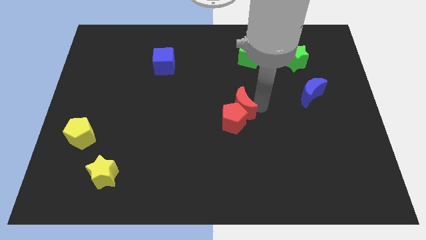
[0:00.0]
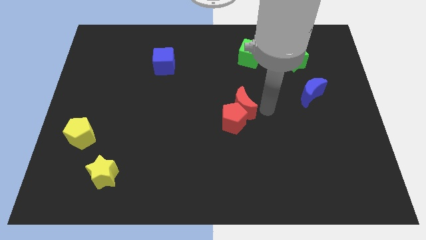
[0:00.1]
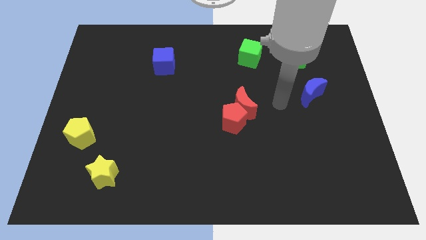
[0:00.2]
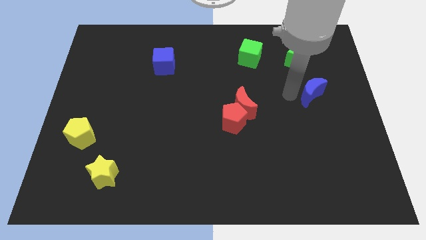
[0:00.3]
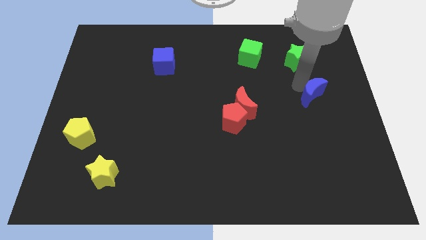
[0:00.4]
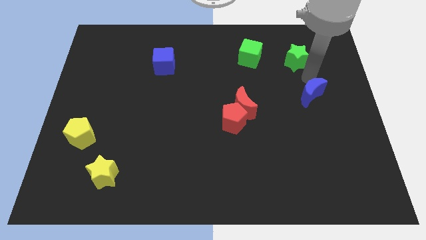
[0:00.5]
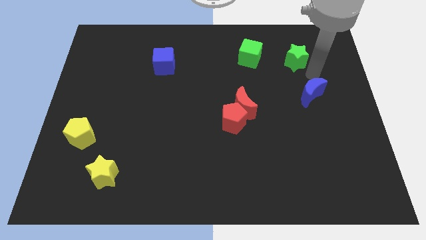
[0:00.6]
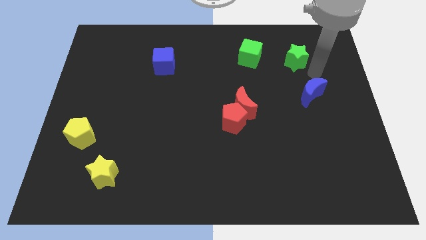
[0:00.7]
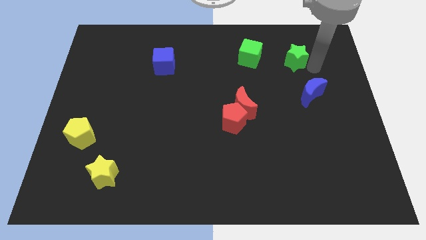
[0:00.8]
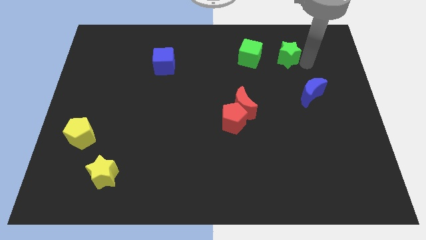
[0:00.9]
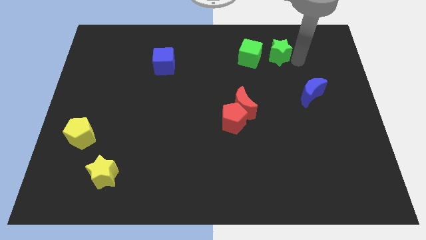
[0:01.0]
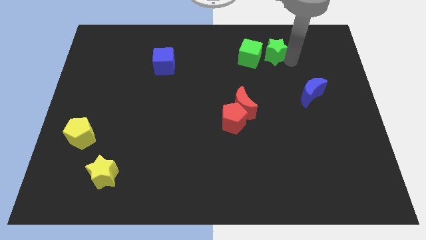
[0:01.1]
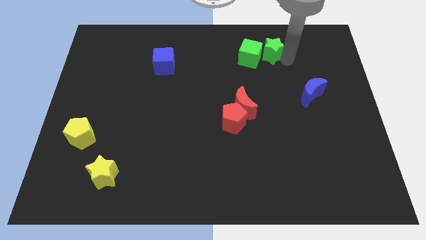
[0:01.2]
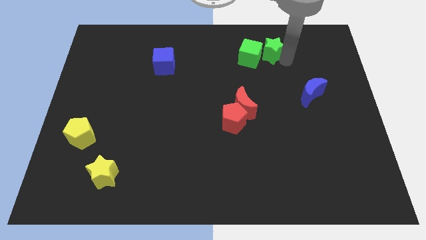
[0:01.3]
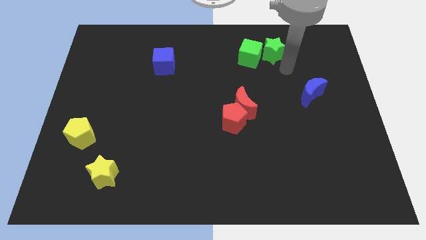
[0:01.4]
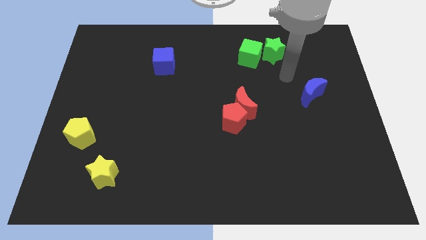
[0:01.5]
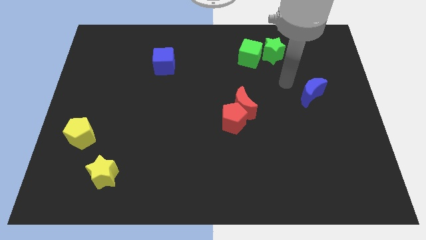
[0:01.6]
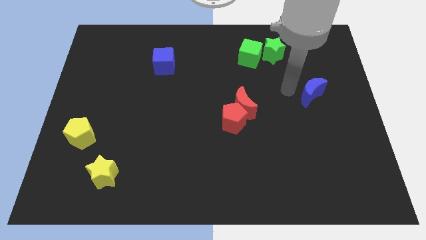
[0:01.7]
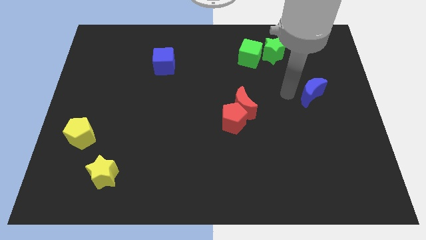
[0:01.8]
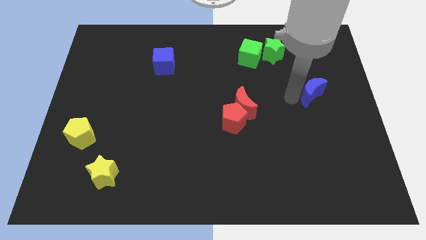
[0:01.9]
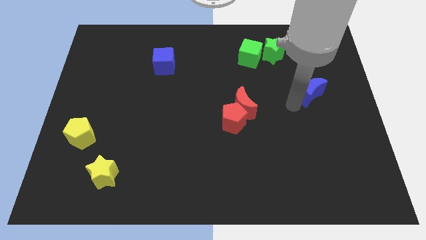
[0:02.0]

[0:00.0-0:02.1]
move green star into green cube

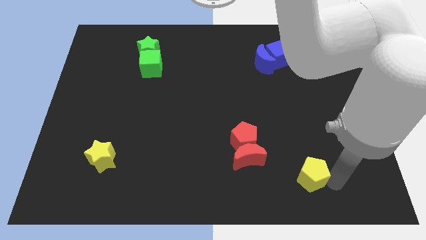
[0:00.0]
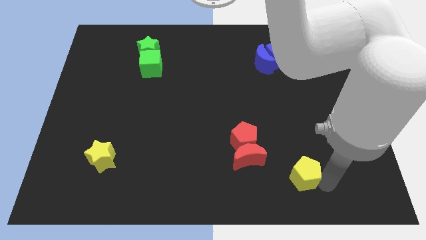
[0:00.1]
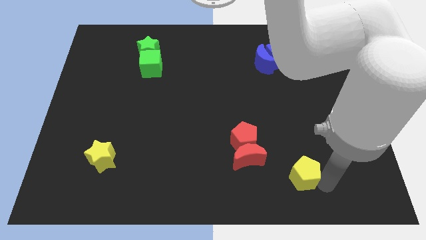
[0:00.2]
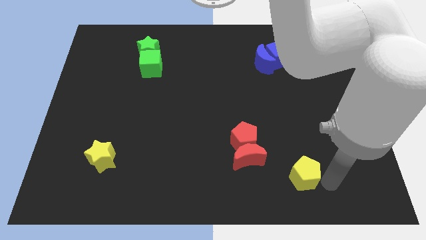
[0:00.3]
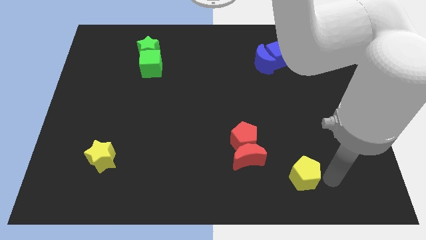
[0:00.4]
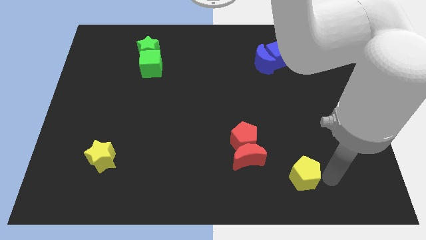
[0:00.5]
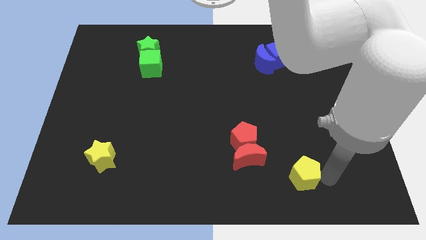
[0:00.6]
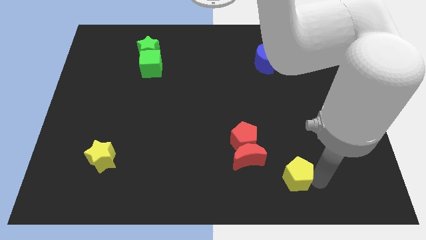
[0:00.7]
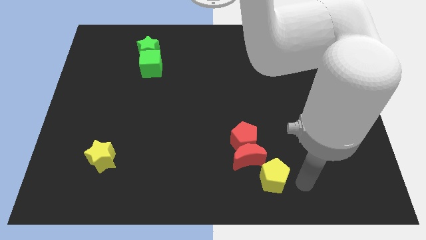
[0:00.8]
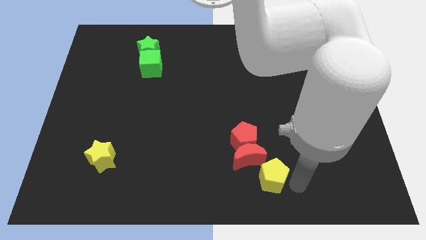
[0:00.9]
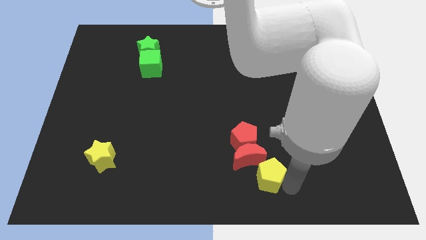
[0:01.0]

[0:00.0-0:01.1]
push the yellow pentagon towards the red crescent

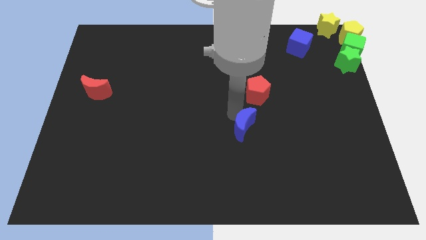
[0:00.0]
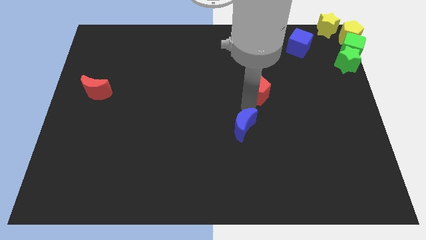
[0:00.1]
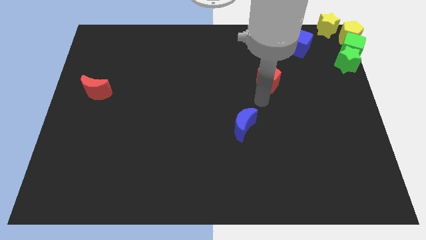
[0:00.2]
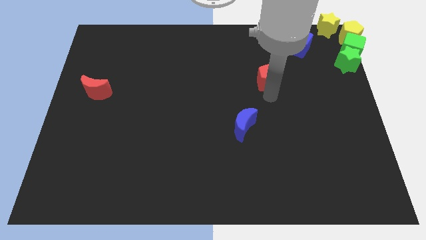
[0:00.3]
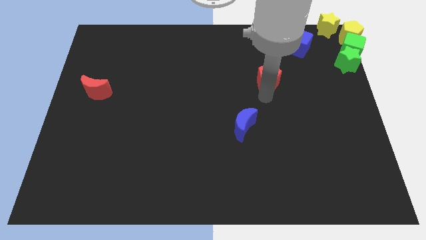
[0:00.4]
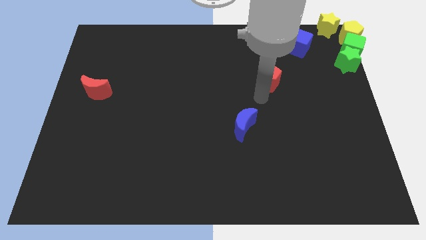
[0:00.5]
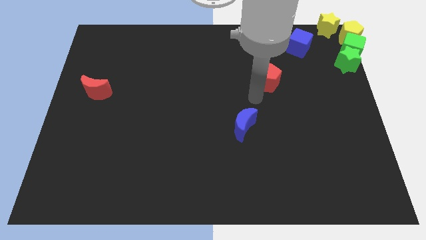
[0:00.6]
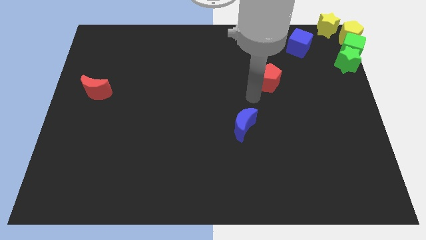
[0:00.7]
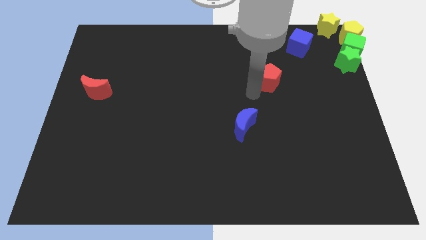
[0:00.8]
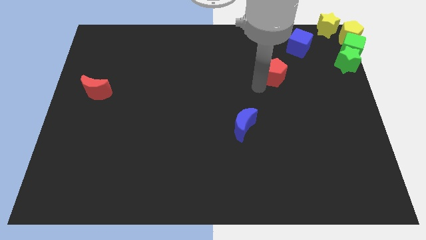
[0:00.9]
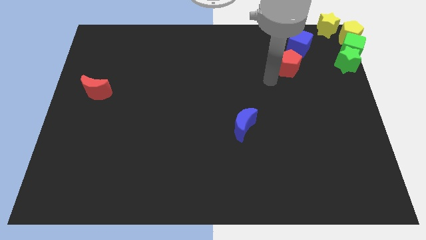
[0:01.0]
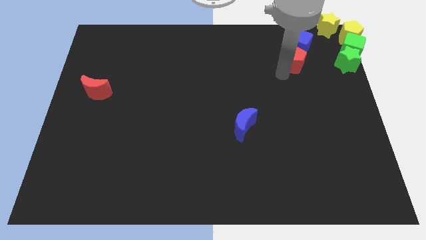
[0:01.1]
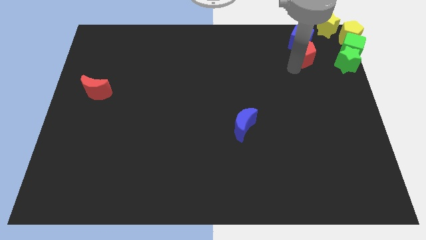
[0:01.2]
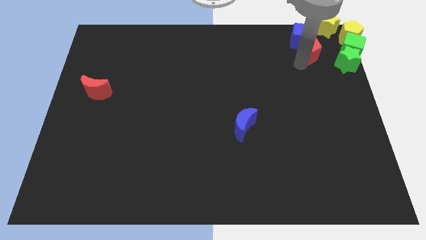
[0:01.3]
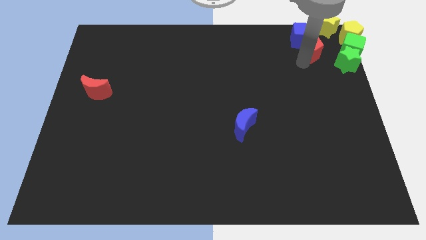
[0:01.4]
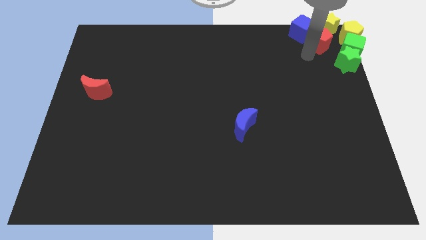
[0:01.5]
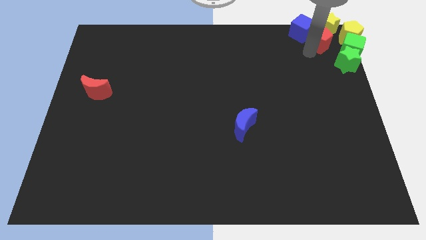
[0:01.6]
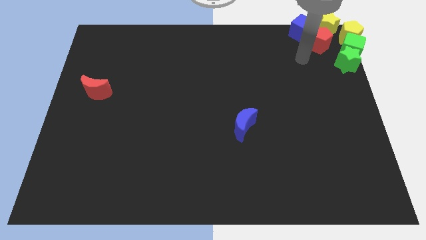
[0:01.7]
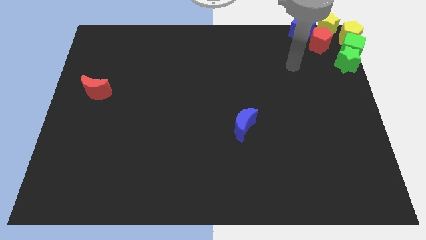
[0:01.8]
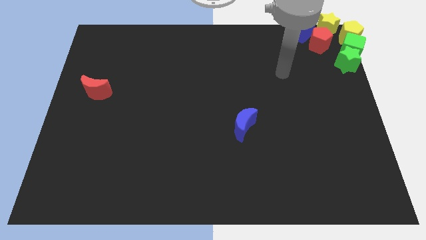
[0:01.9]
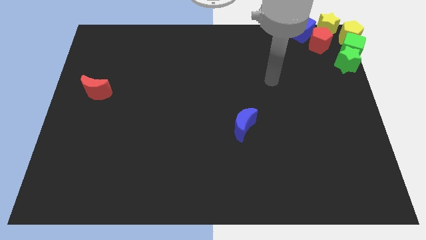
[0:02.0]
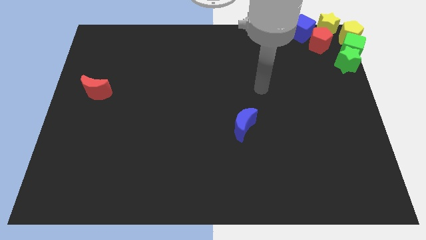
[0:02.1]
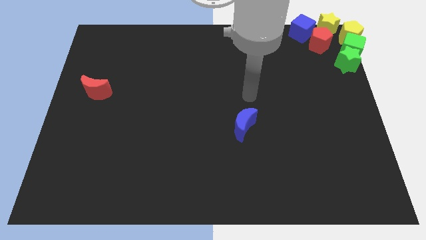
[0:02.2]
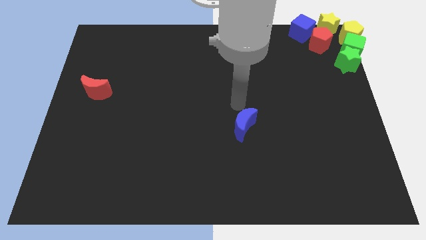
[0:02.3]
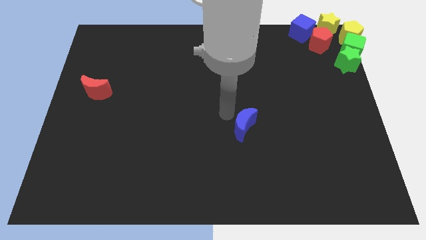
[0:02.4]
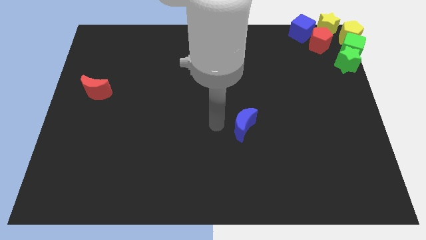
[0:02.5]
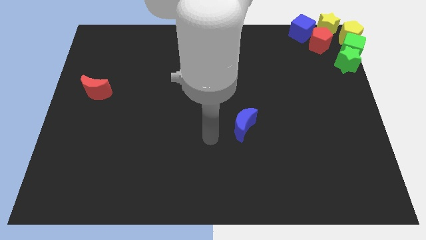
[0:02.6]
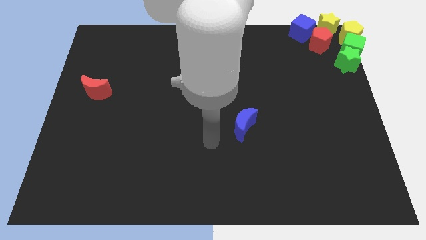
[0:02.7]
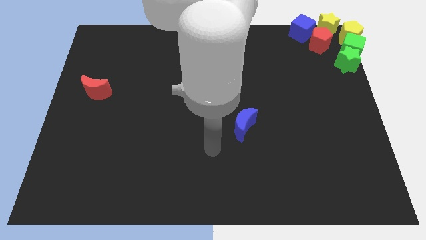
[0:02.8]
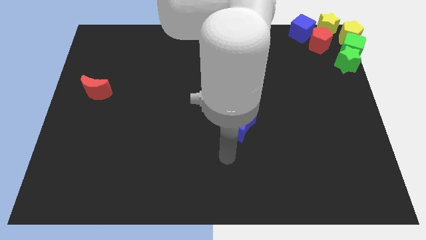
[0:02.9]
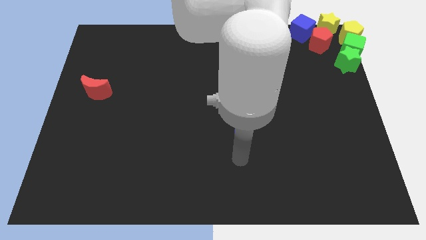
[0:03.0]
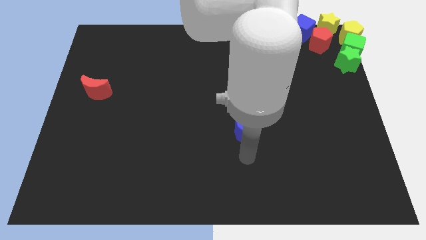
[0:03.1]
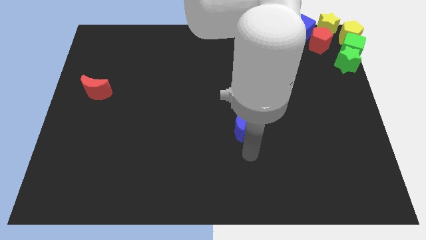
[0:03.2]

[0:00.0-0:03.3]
push the red pentagon into the yellow star

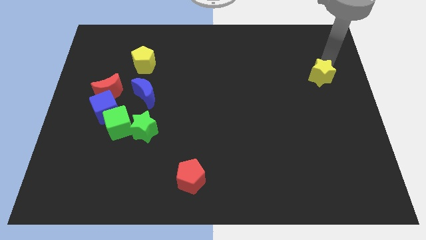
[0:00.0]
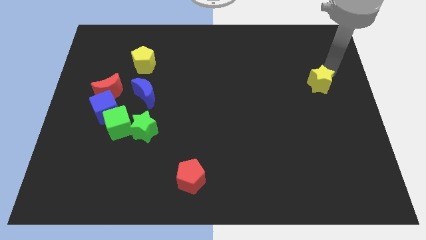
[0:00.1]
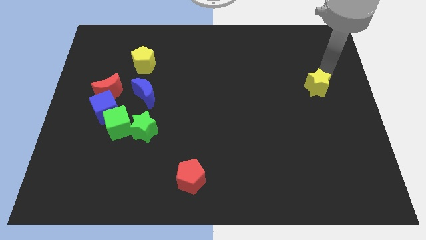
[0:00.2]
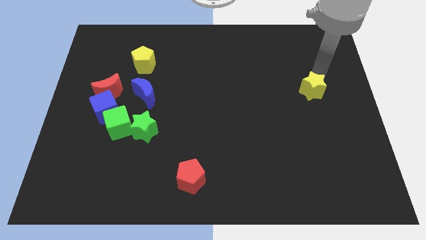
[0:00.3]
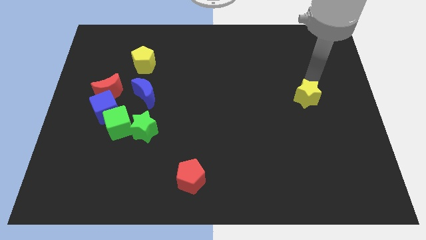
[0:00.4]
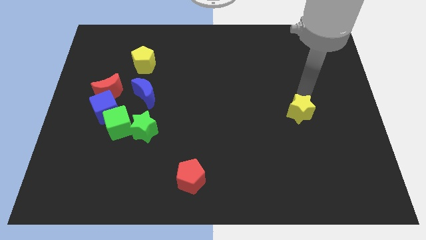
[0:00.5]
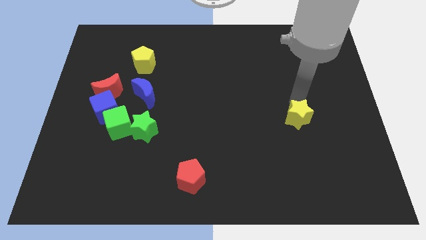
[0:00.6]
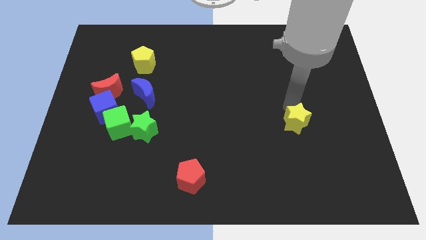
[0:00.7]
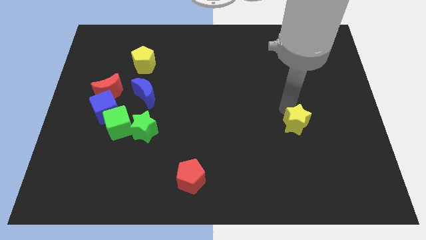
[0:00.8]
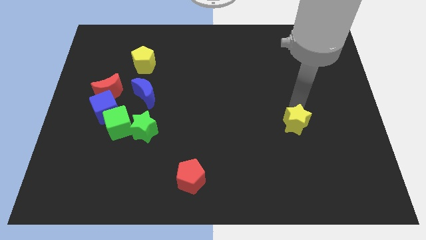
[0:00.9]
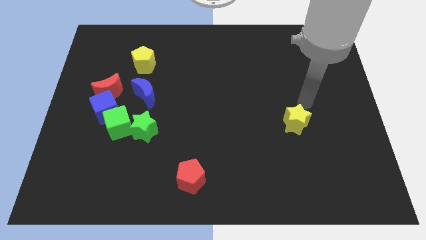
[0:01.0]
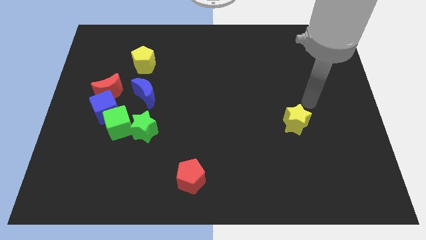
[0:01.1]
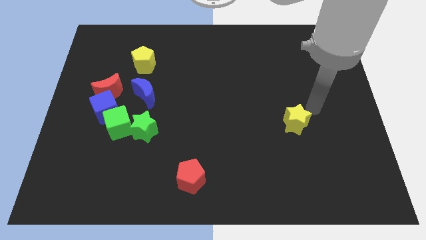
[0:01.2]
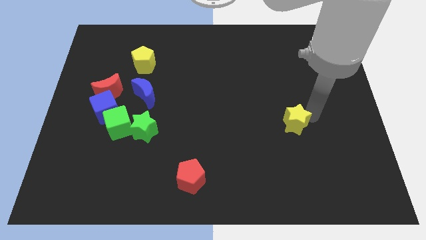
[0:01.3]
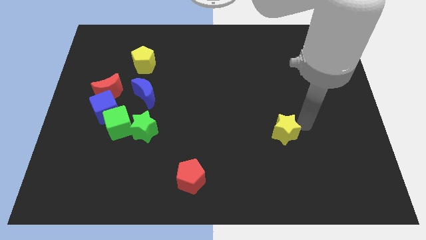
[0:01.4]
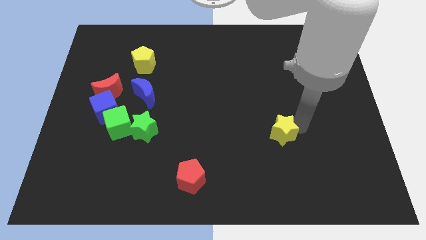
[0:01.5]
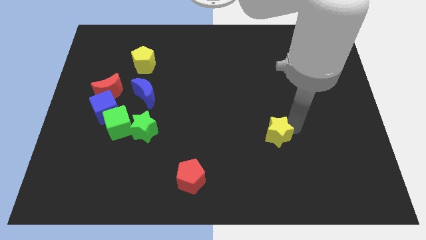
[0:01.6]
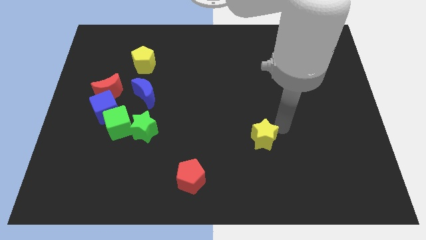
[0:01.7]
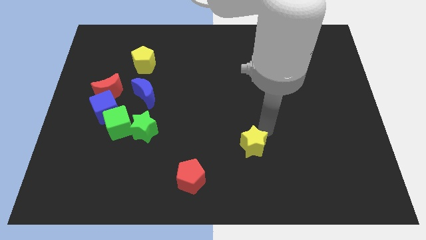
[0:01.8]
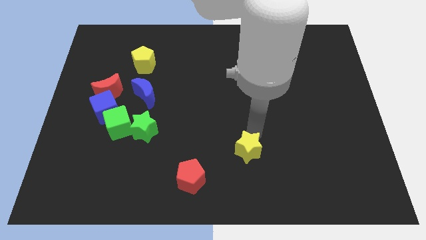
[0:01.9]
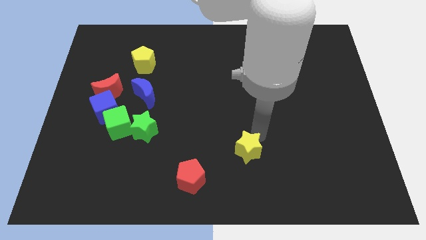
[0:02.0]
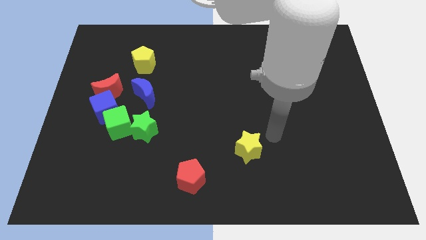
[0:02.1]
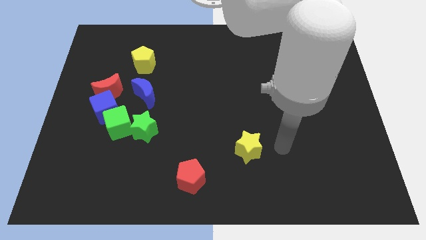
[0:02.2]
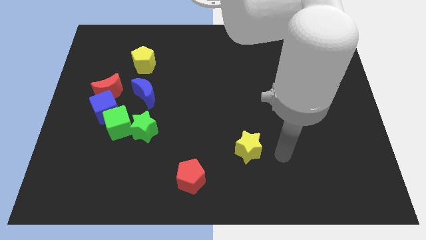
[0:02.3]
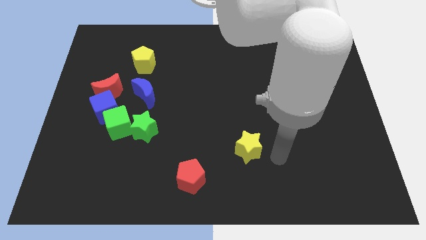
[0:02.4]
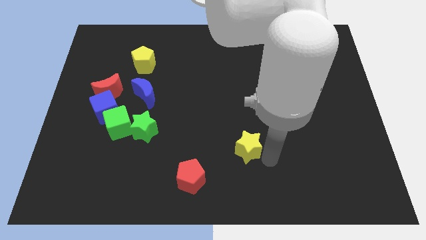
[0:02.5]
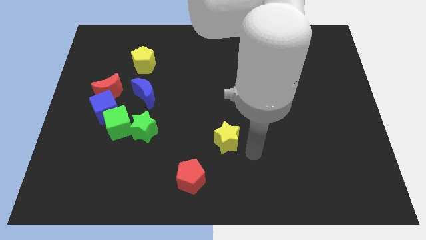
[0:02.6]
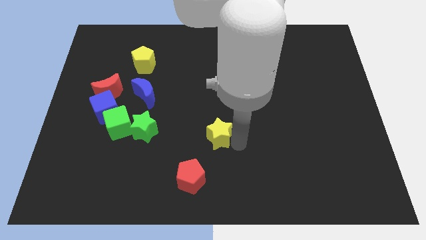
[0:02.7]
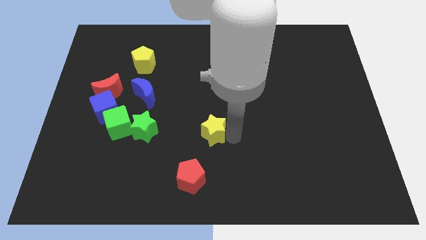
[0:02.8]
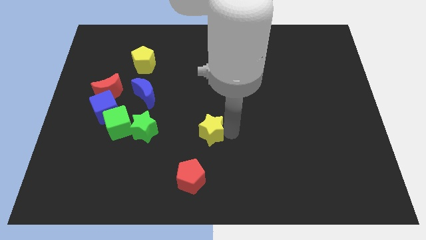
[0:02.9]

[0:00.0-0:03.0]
move yellow star towards red pentagon
